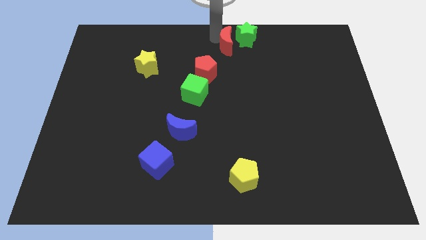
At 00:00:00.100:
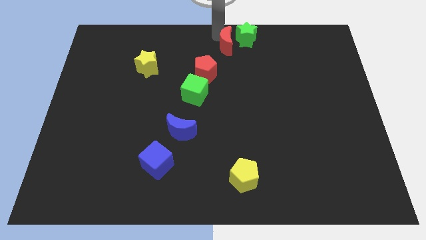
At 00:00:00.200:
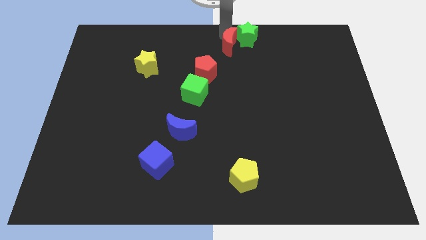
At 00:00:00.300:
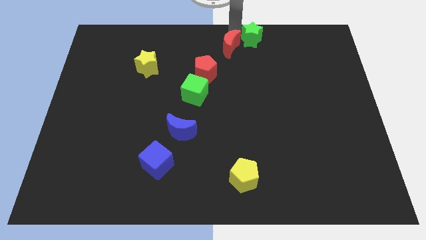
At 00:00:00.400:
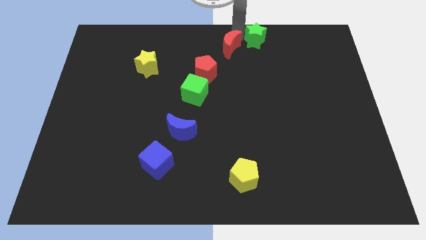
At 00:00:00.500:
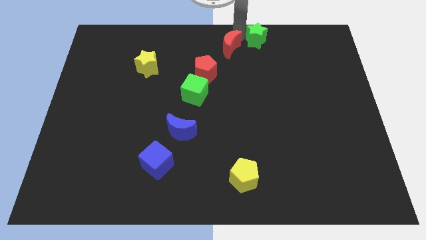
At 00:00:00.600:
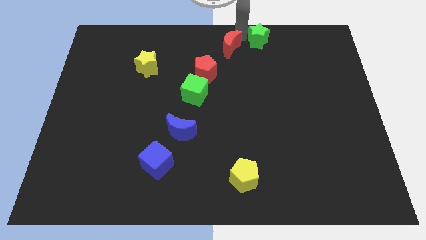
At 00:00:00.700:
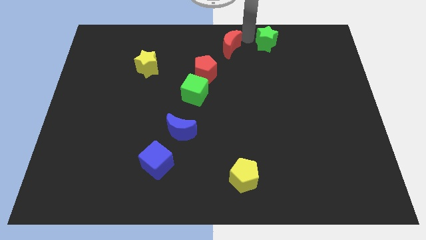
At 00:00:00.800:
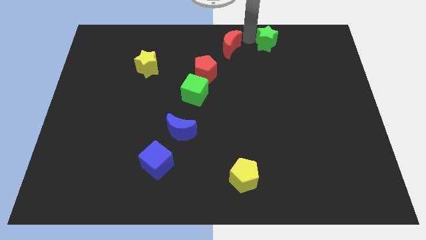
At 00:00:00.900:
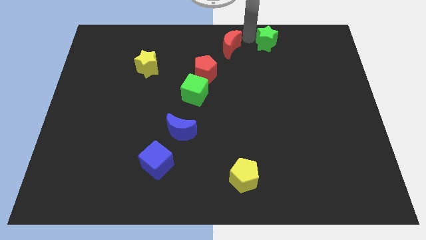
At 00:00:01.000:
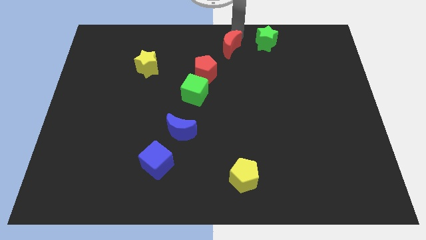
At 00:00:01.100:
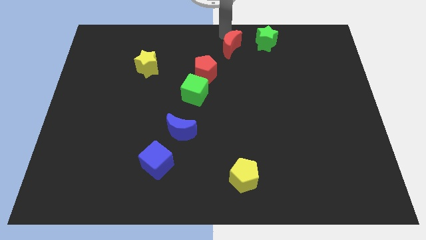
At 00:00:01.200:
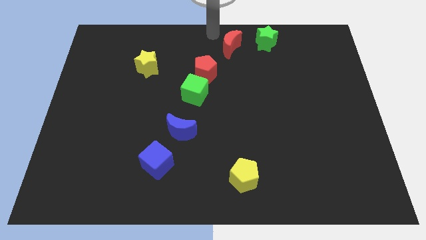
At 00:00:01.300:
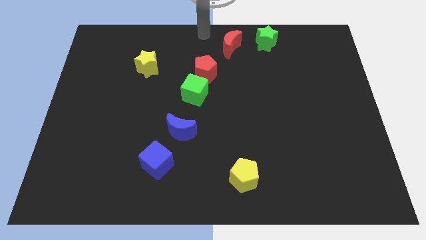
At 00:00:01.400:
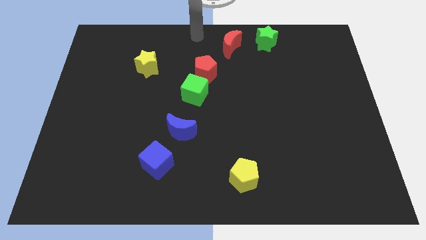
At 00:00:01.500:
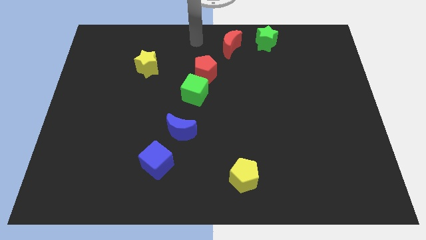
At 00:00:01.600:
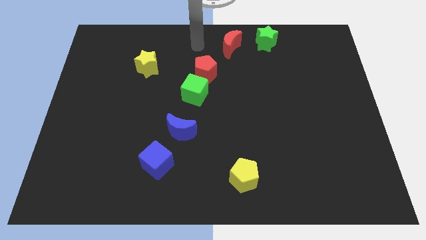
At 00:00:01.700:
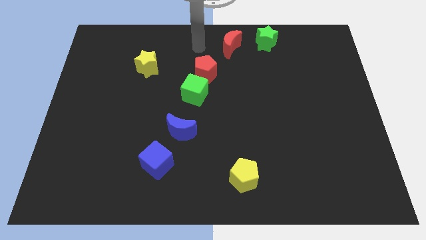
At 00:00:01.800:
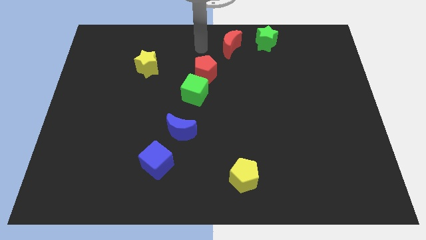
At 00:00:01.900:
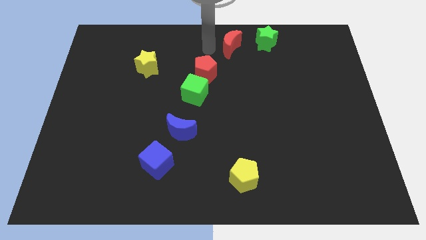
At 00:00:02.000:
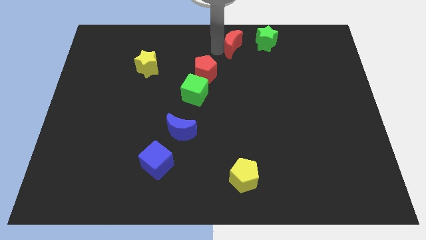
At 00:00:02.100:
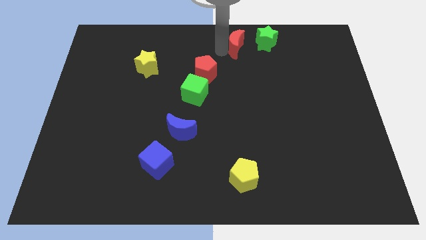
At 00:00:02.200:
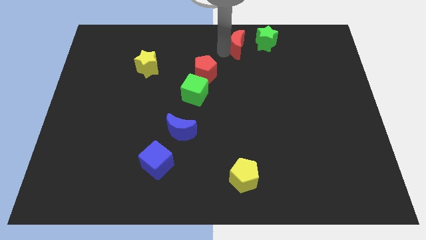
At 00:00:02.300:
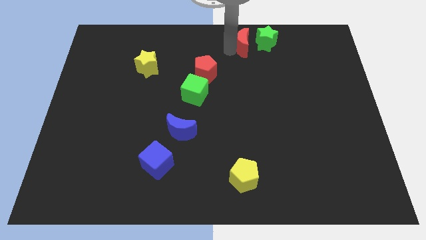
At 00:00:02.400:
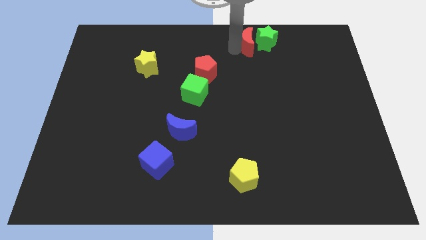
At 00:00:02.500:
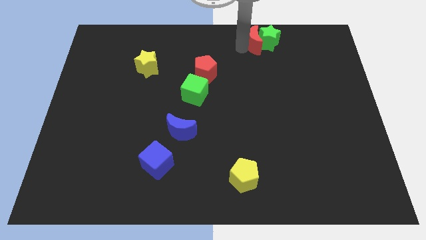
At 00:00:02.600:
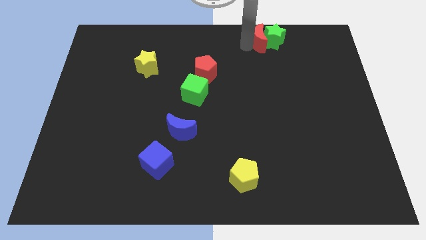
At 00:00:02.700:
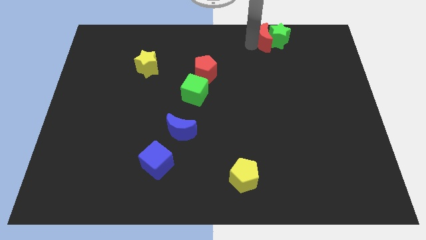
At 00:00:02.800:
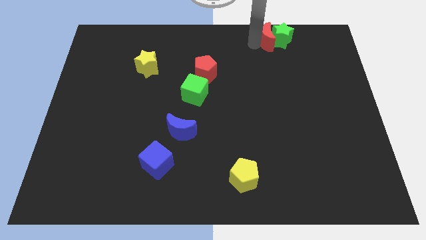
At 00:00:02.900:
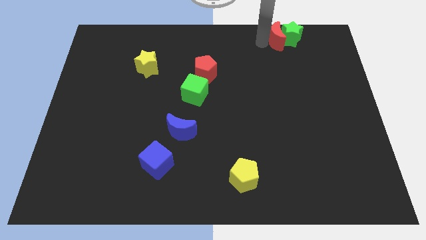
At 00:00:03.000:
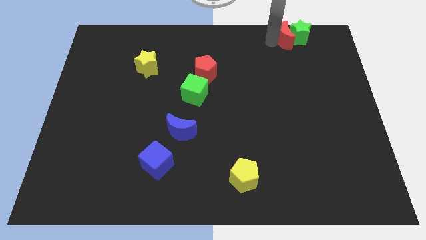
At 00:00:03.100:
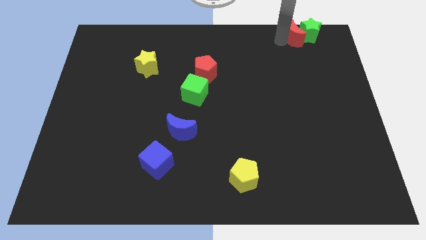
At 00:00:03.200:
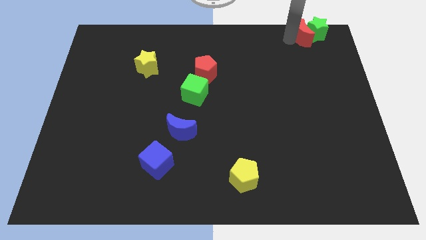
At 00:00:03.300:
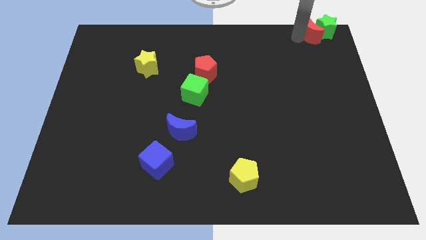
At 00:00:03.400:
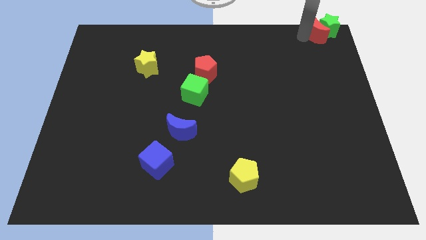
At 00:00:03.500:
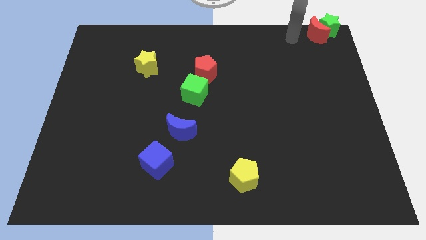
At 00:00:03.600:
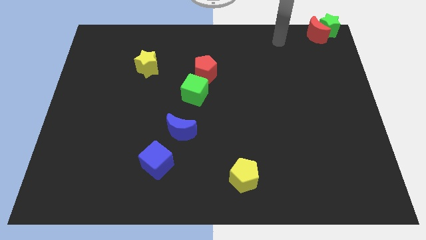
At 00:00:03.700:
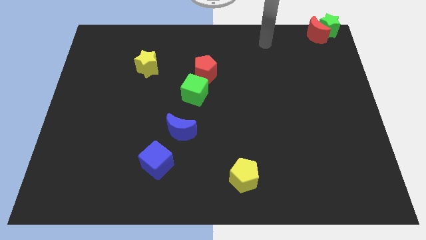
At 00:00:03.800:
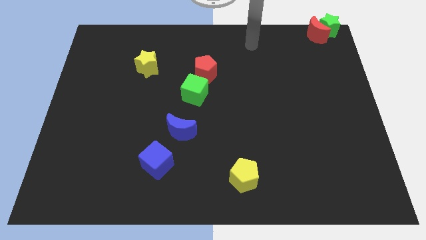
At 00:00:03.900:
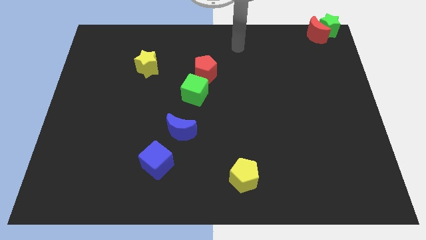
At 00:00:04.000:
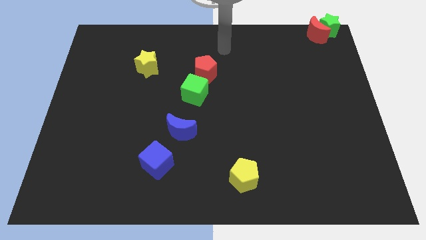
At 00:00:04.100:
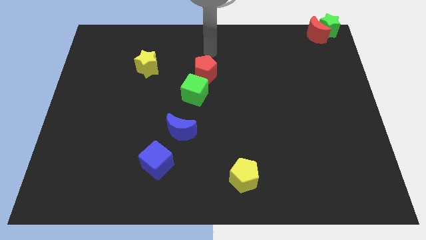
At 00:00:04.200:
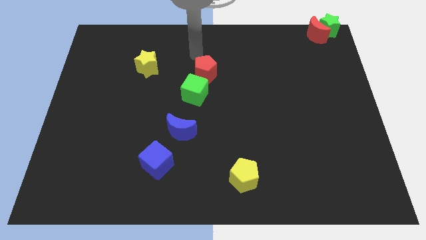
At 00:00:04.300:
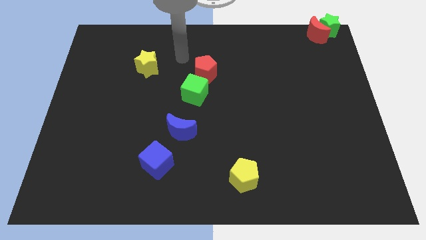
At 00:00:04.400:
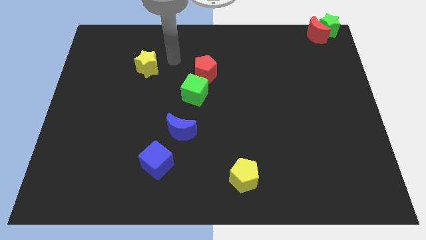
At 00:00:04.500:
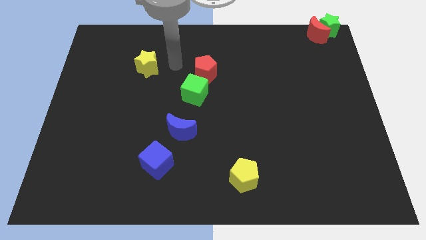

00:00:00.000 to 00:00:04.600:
put the green star and red crescent at the top right corner

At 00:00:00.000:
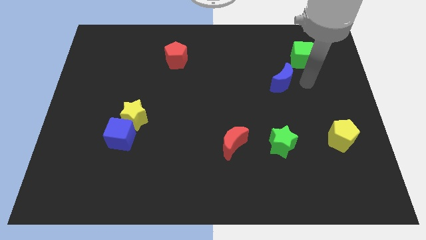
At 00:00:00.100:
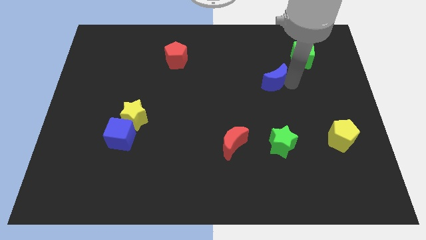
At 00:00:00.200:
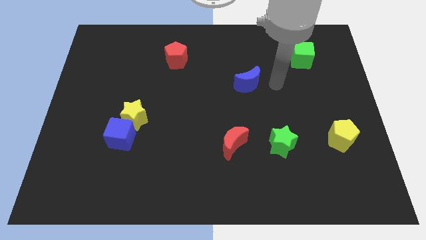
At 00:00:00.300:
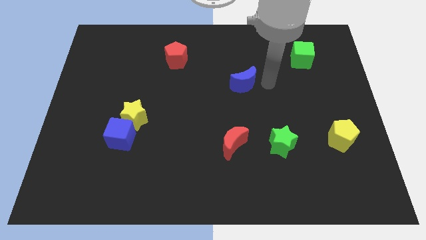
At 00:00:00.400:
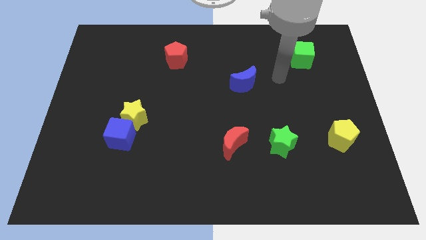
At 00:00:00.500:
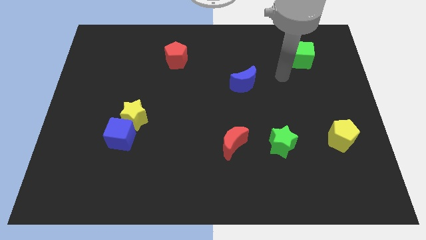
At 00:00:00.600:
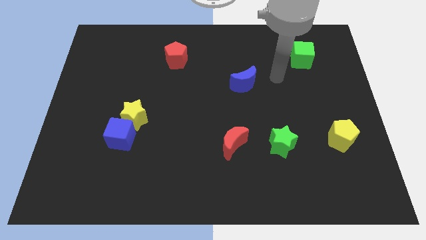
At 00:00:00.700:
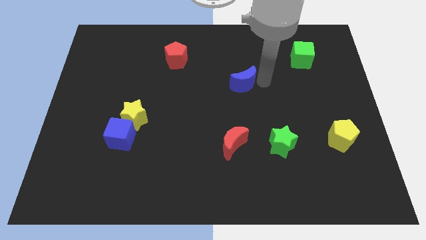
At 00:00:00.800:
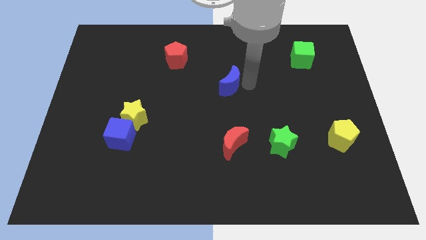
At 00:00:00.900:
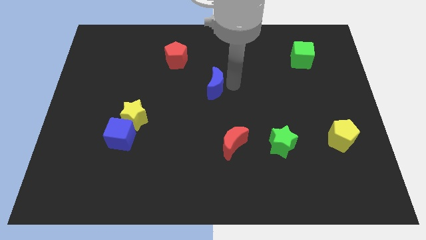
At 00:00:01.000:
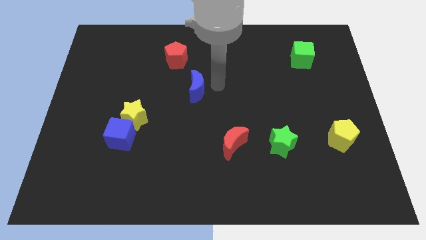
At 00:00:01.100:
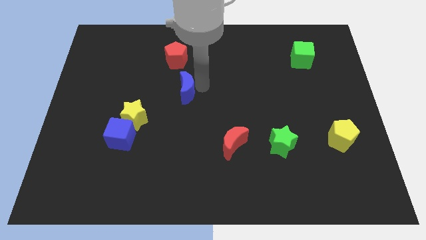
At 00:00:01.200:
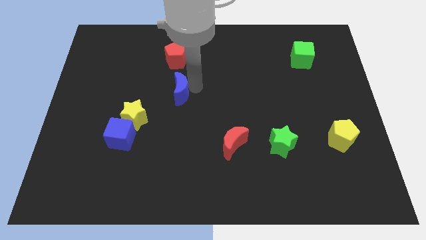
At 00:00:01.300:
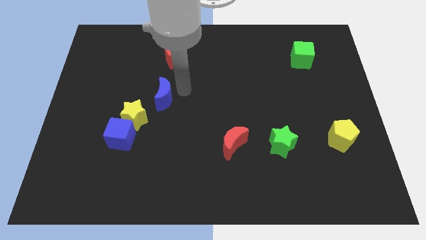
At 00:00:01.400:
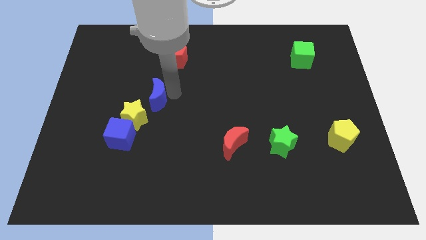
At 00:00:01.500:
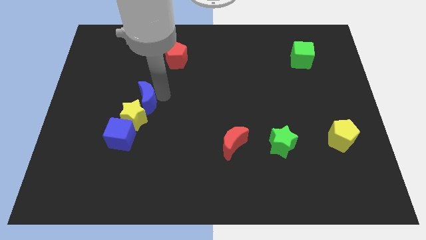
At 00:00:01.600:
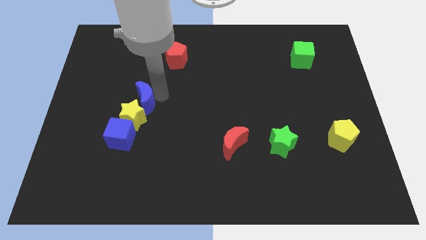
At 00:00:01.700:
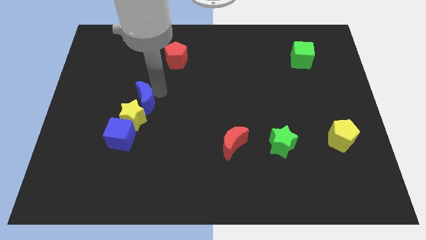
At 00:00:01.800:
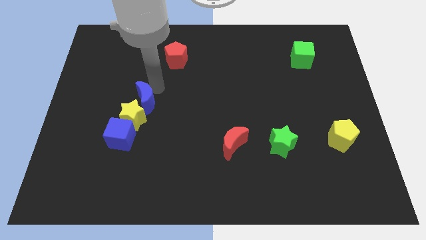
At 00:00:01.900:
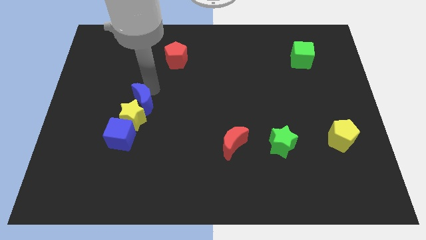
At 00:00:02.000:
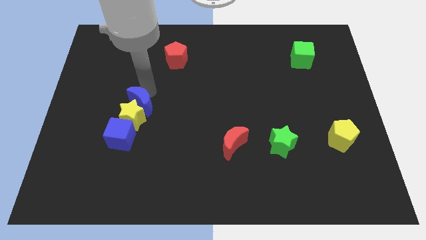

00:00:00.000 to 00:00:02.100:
move blue crescent into the top right side of the yellow star

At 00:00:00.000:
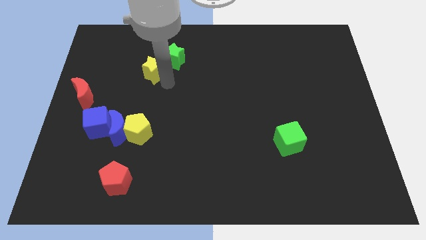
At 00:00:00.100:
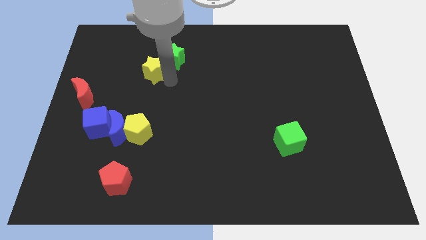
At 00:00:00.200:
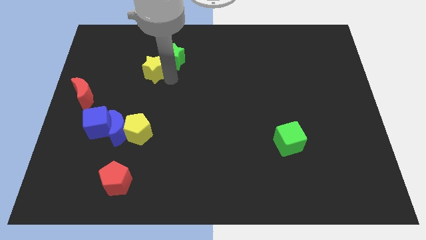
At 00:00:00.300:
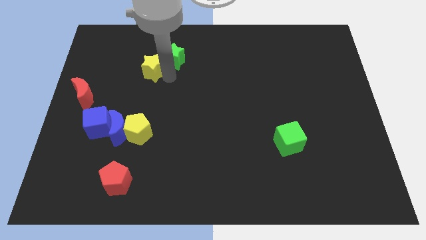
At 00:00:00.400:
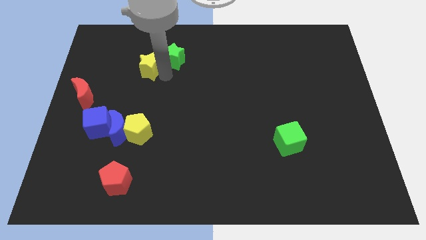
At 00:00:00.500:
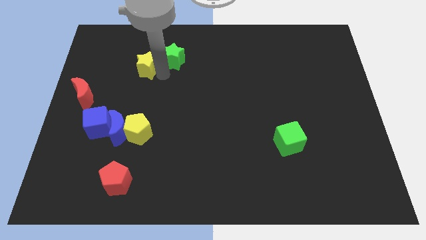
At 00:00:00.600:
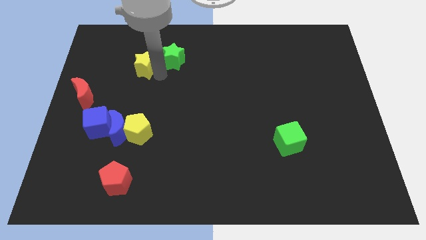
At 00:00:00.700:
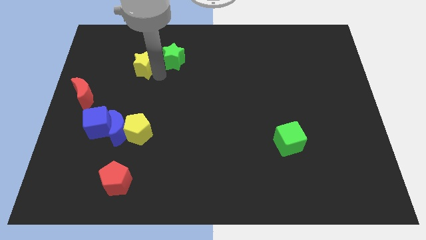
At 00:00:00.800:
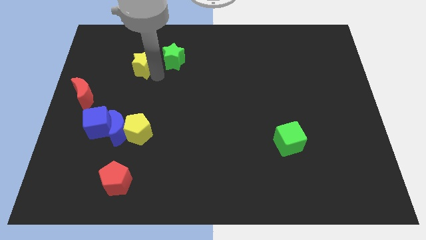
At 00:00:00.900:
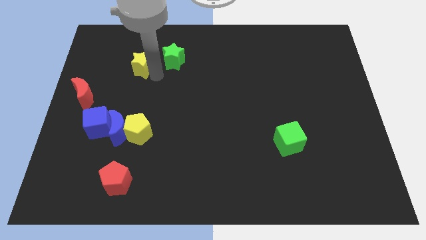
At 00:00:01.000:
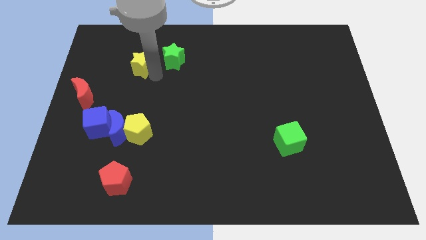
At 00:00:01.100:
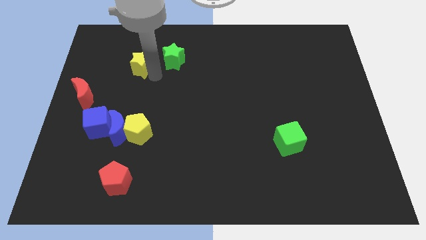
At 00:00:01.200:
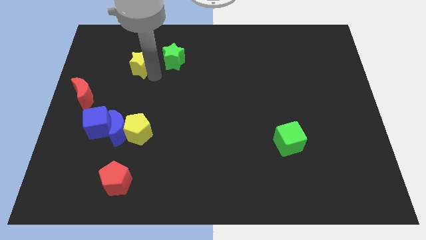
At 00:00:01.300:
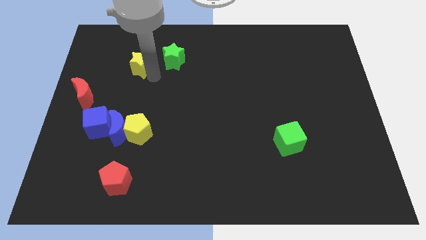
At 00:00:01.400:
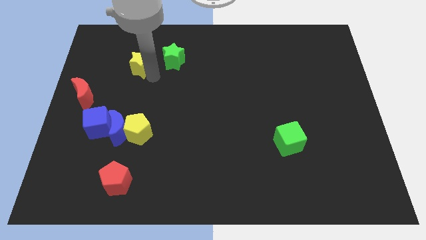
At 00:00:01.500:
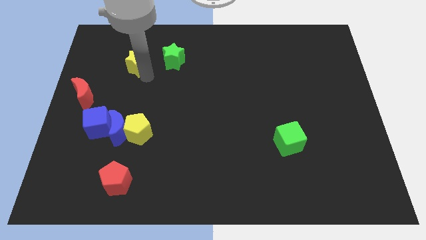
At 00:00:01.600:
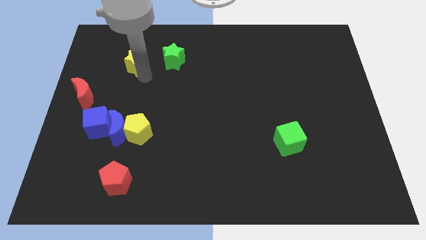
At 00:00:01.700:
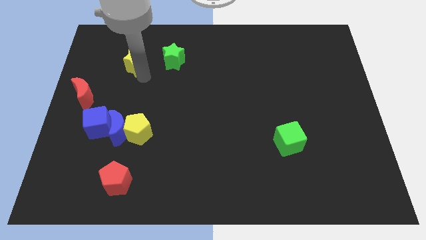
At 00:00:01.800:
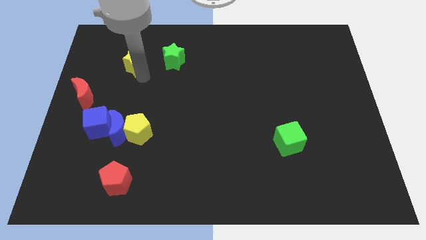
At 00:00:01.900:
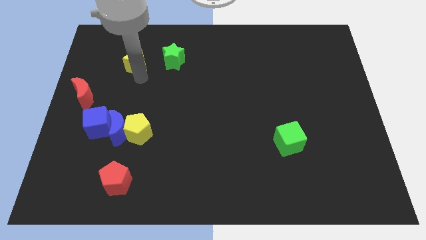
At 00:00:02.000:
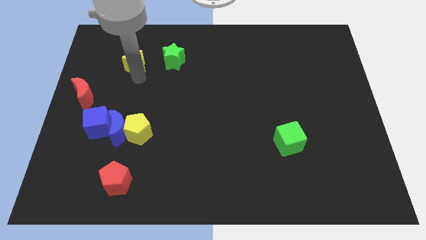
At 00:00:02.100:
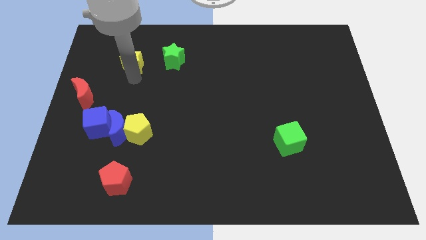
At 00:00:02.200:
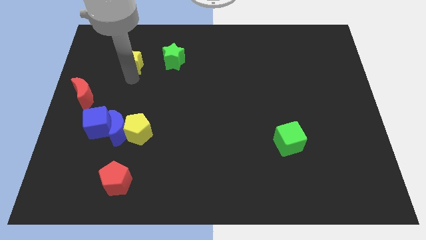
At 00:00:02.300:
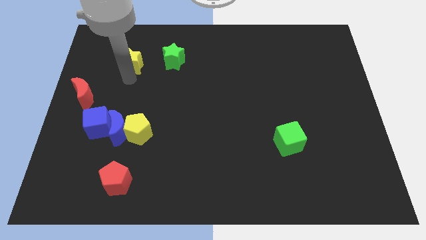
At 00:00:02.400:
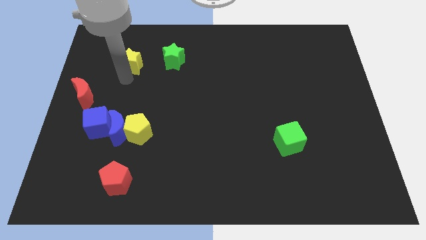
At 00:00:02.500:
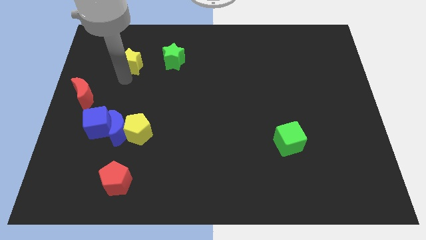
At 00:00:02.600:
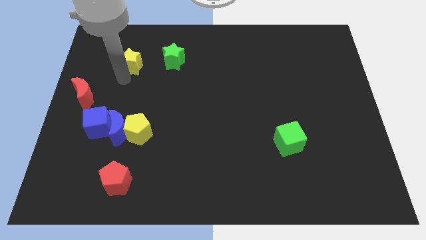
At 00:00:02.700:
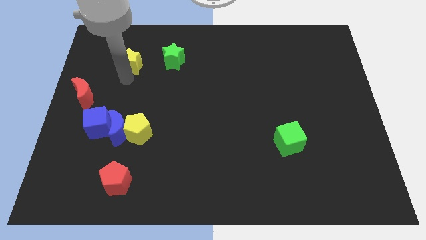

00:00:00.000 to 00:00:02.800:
push yellow star beside green star
